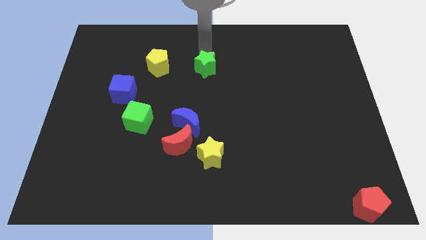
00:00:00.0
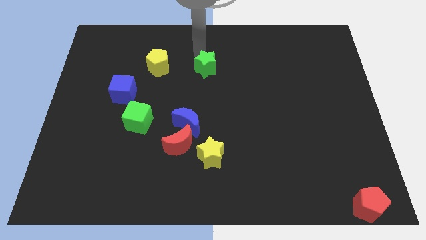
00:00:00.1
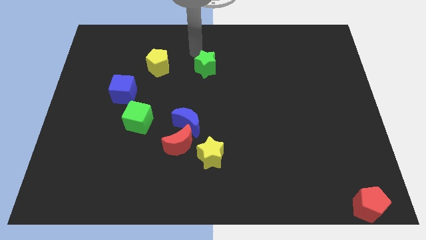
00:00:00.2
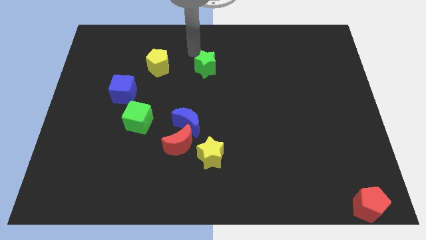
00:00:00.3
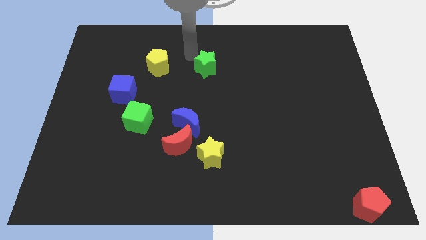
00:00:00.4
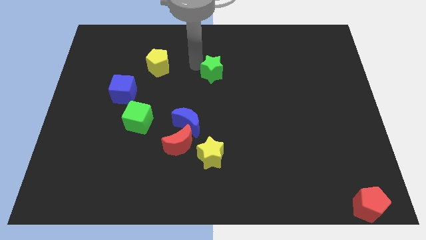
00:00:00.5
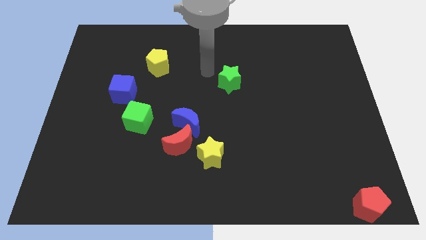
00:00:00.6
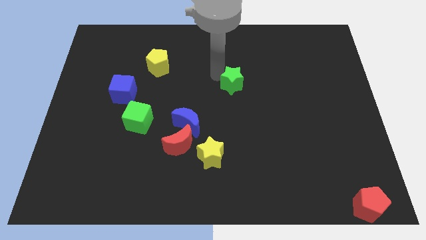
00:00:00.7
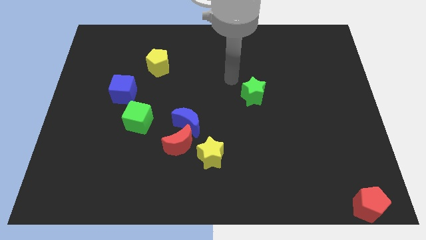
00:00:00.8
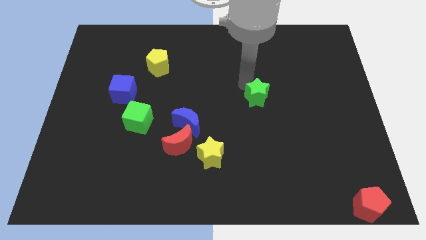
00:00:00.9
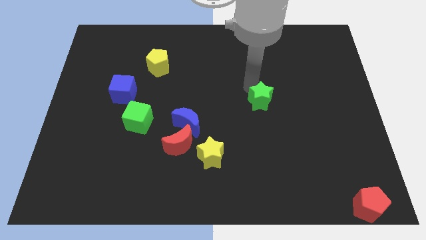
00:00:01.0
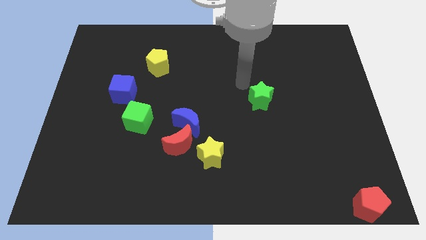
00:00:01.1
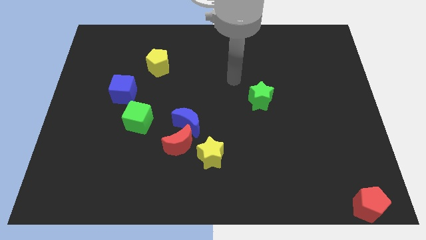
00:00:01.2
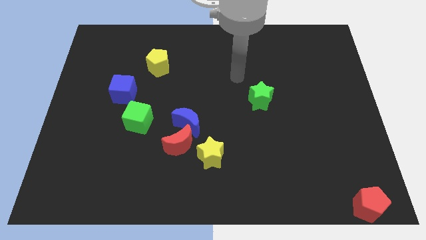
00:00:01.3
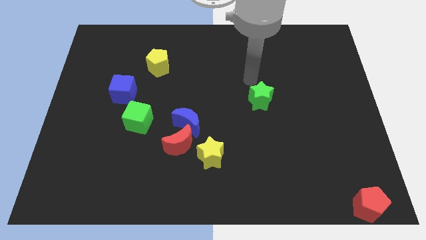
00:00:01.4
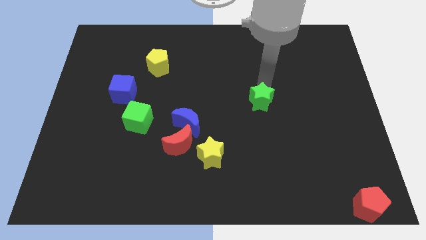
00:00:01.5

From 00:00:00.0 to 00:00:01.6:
push green star to the center of the board

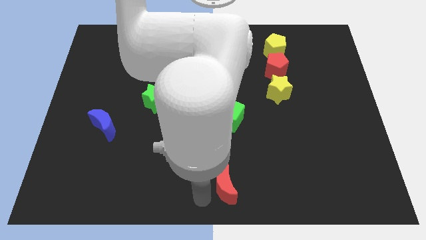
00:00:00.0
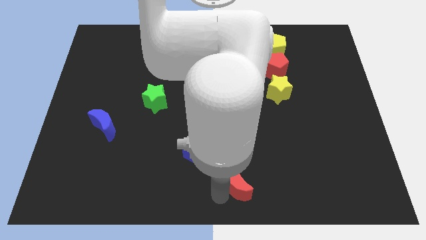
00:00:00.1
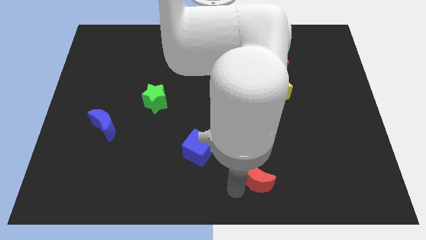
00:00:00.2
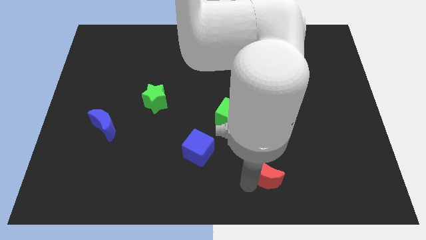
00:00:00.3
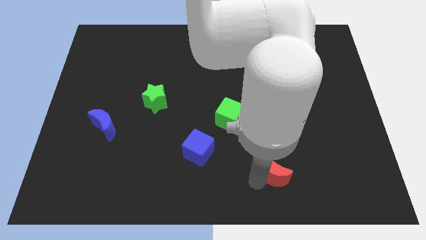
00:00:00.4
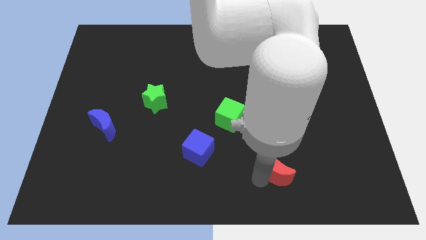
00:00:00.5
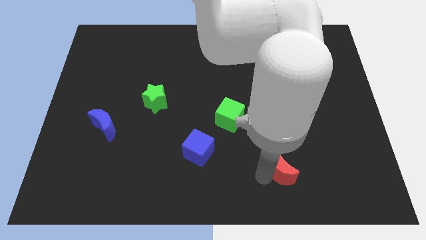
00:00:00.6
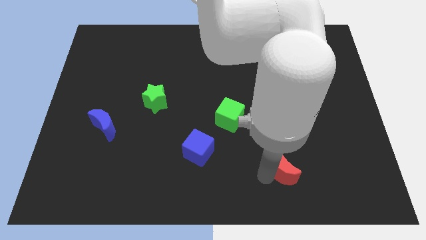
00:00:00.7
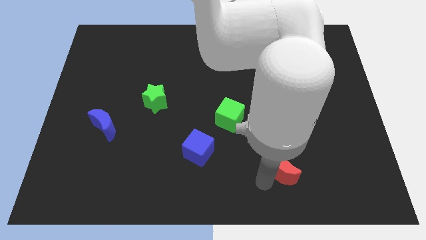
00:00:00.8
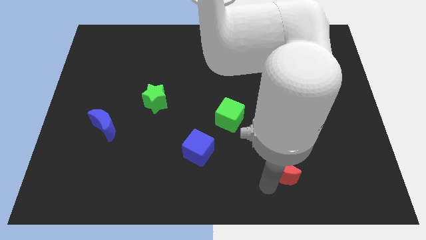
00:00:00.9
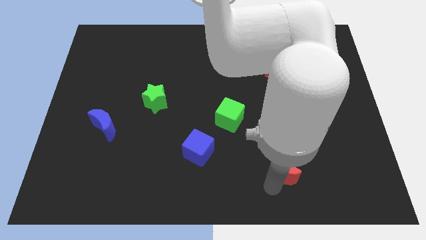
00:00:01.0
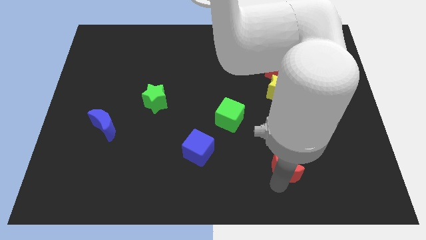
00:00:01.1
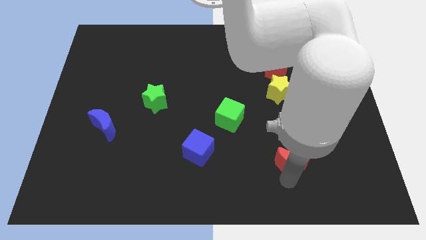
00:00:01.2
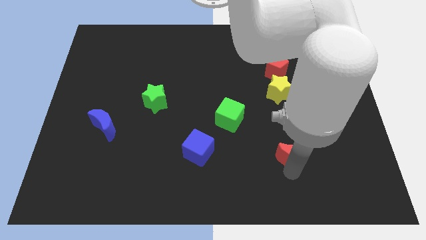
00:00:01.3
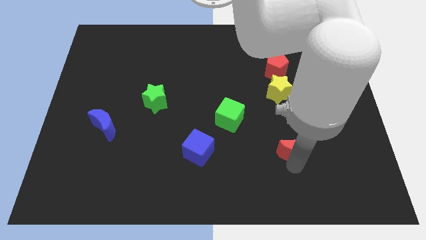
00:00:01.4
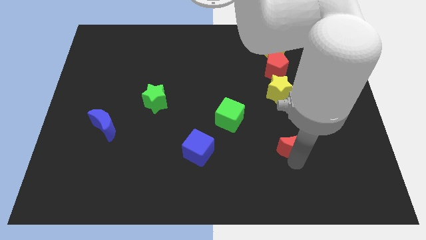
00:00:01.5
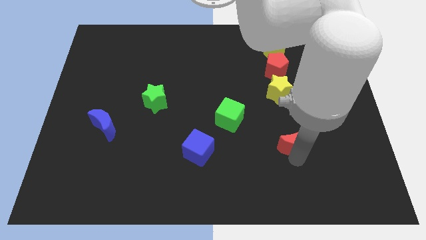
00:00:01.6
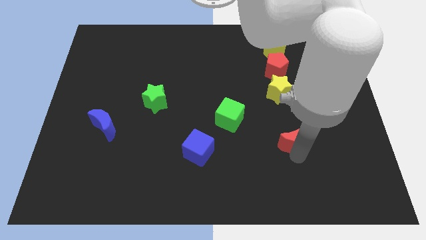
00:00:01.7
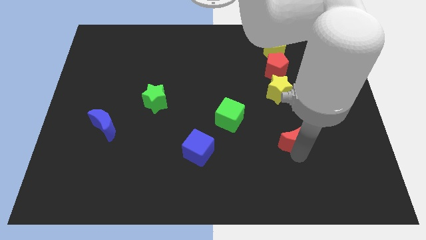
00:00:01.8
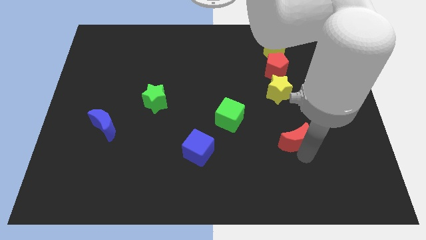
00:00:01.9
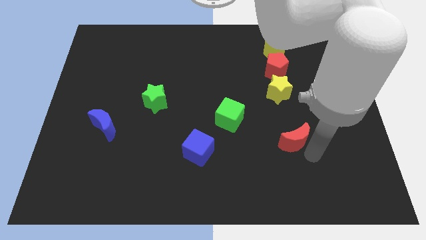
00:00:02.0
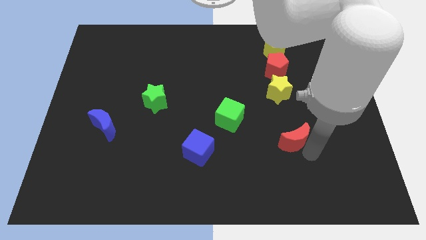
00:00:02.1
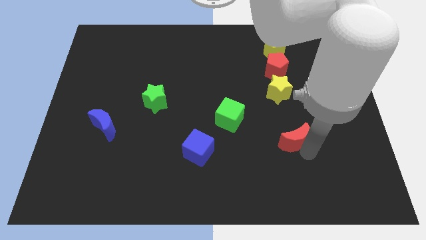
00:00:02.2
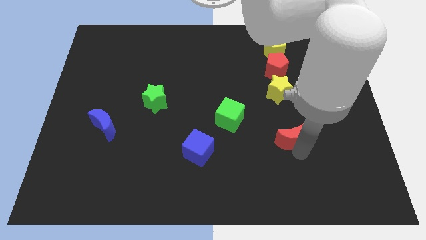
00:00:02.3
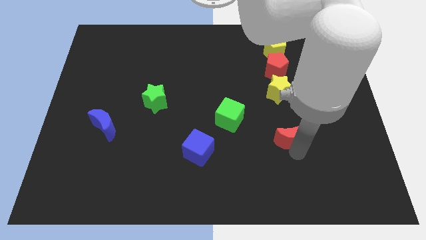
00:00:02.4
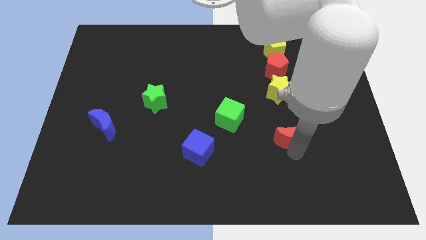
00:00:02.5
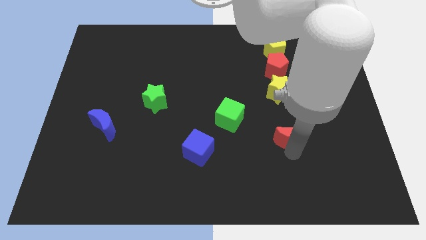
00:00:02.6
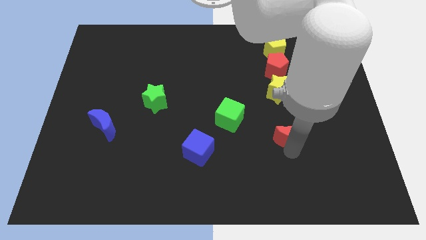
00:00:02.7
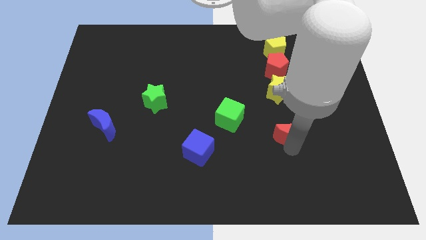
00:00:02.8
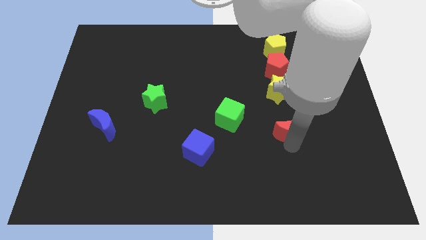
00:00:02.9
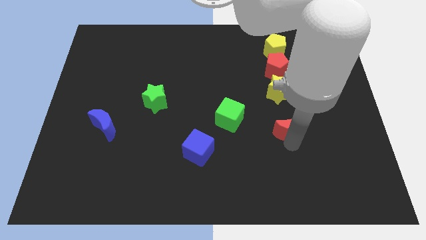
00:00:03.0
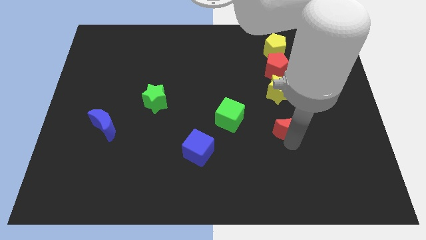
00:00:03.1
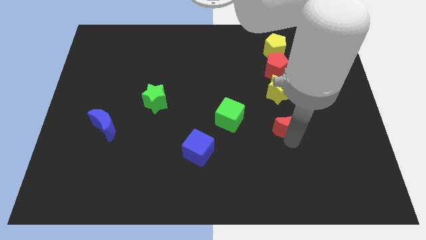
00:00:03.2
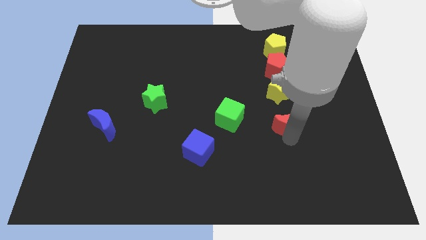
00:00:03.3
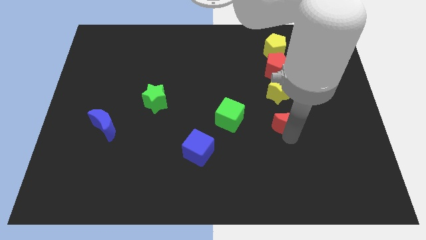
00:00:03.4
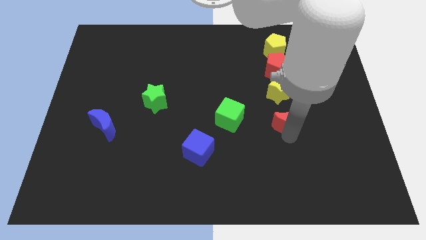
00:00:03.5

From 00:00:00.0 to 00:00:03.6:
move the red moon to the right of green cube

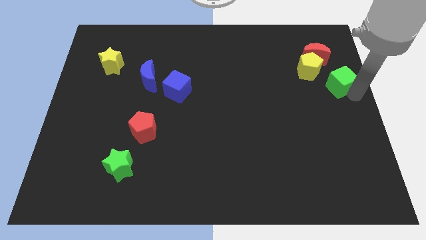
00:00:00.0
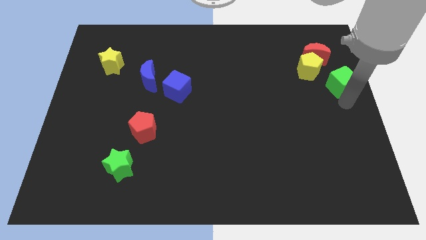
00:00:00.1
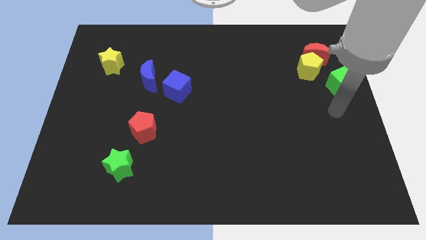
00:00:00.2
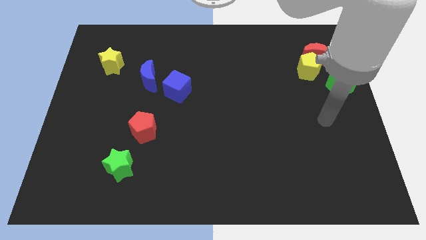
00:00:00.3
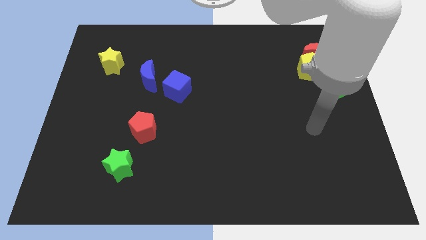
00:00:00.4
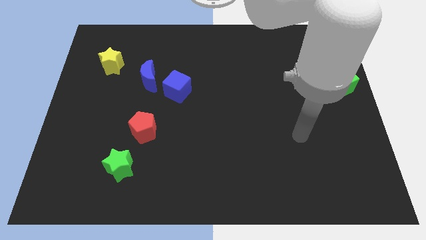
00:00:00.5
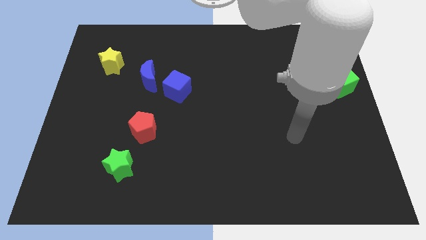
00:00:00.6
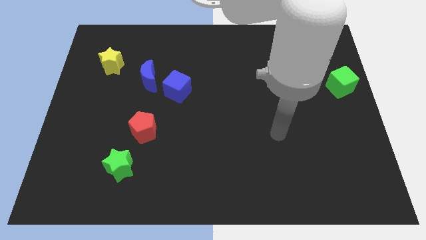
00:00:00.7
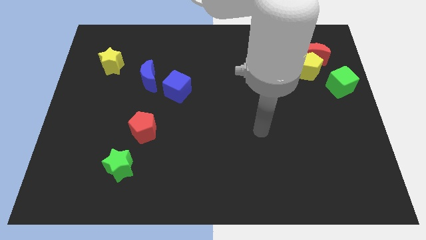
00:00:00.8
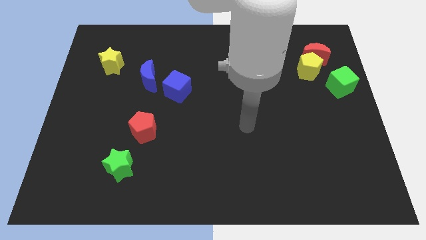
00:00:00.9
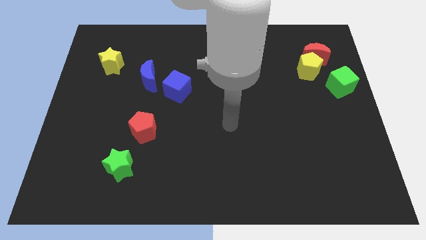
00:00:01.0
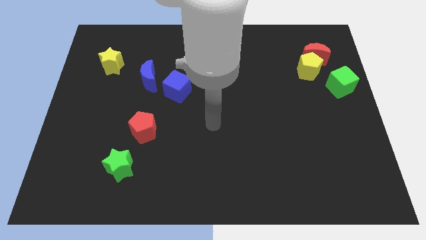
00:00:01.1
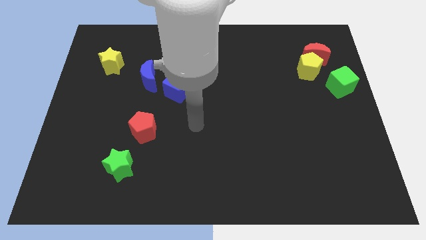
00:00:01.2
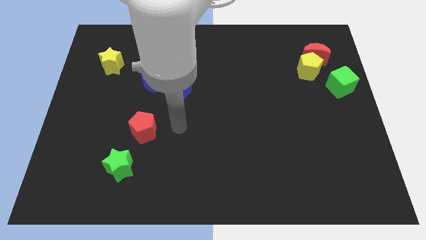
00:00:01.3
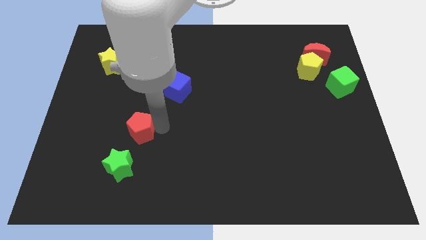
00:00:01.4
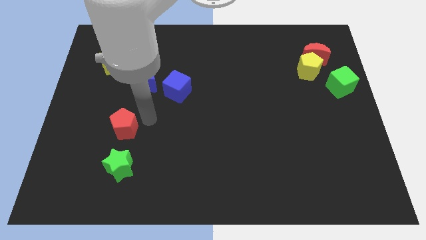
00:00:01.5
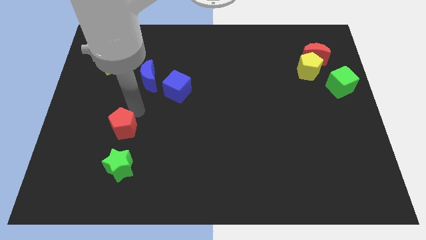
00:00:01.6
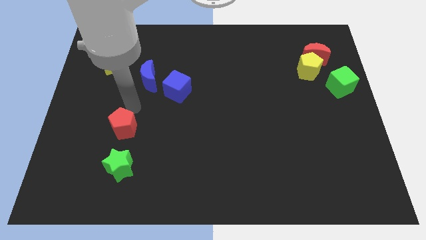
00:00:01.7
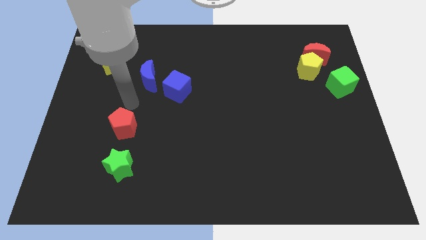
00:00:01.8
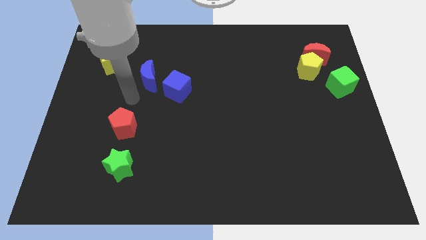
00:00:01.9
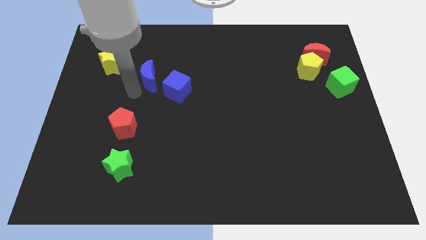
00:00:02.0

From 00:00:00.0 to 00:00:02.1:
move the arm away from the green cube

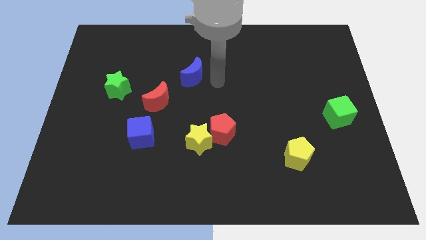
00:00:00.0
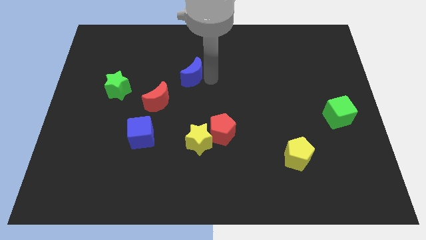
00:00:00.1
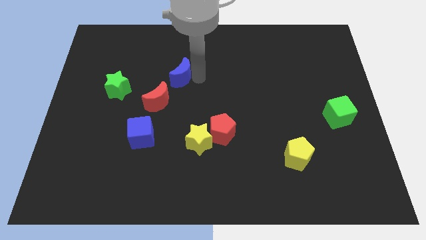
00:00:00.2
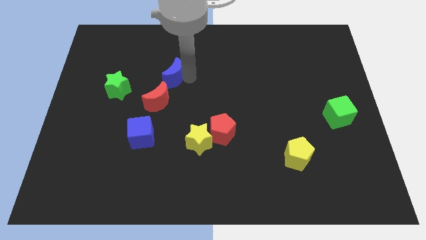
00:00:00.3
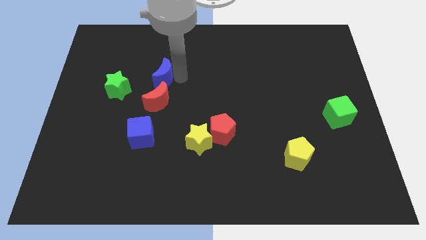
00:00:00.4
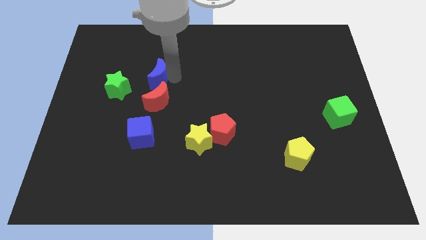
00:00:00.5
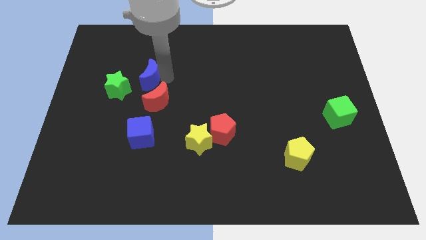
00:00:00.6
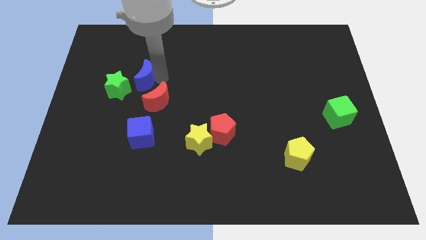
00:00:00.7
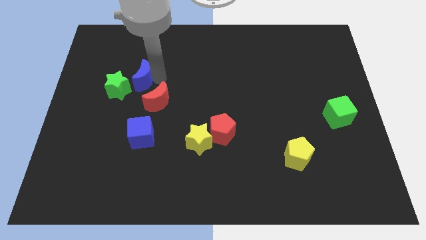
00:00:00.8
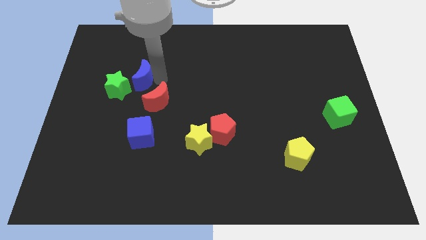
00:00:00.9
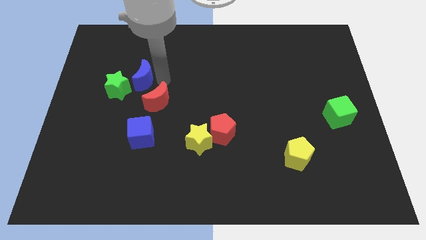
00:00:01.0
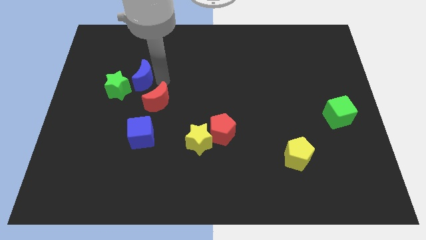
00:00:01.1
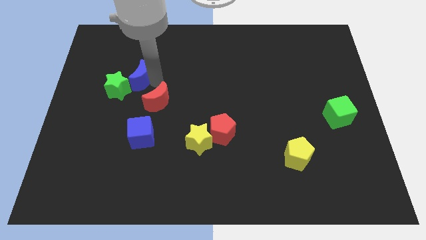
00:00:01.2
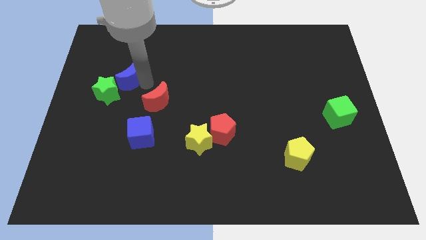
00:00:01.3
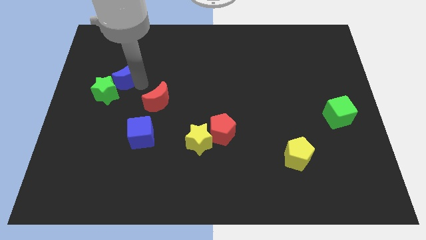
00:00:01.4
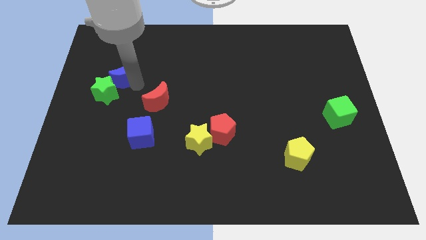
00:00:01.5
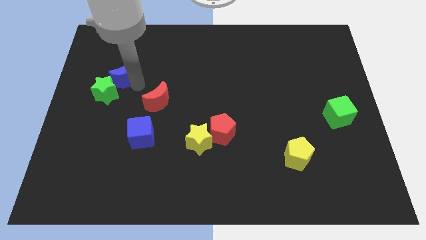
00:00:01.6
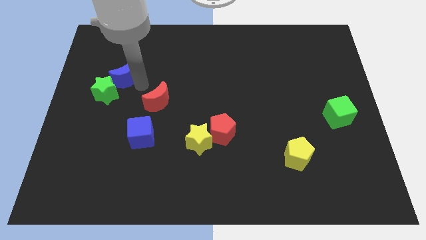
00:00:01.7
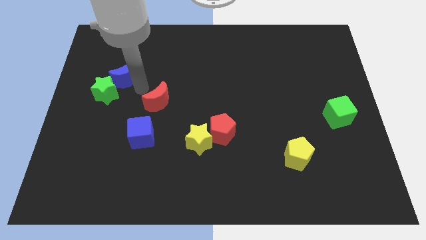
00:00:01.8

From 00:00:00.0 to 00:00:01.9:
push the half blue moon into green star
